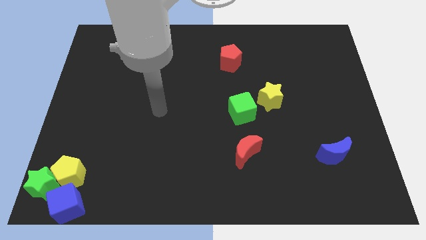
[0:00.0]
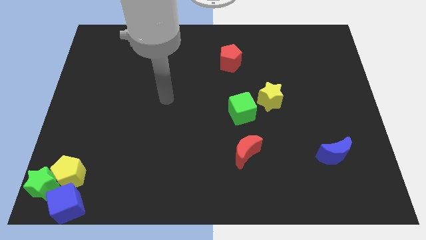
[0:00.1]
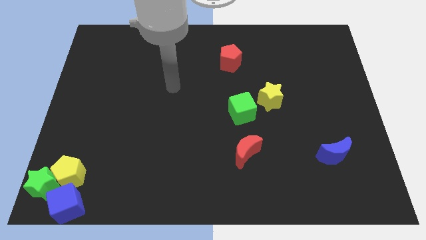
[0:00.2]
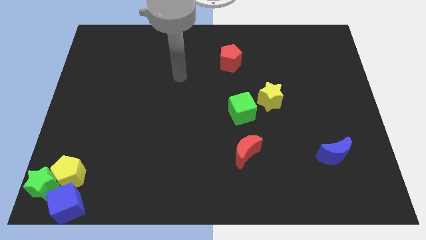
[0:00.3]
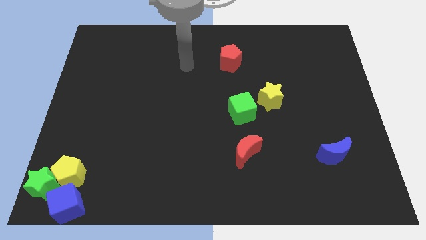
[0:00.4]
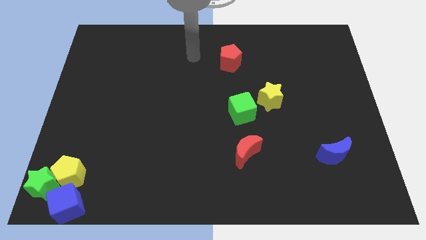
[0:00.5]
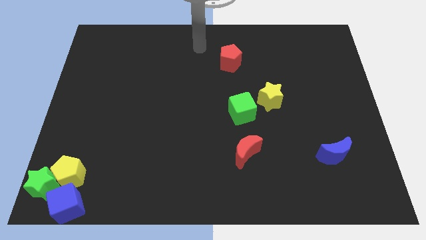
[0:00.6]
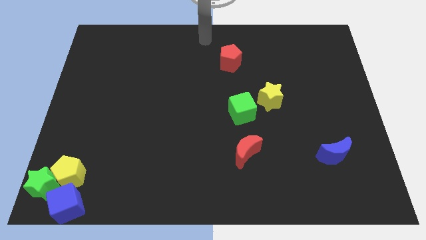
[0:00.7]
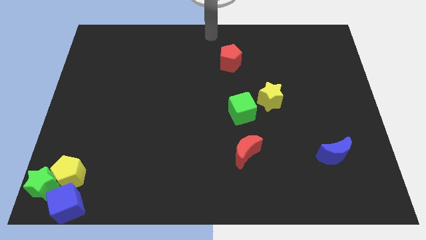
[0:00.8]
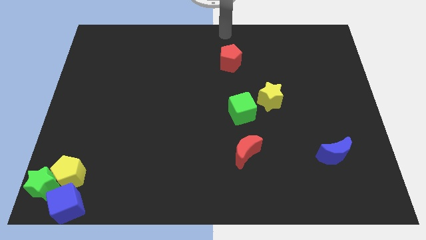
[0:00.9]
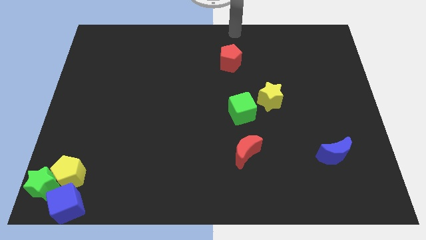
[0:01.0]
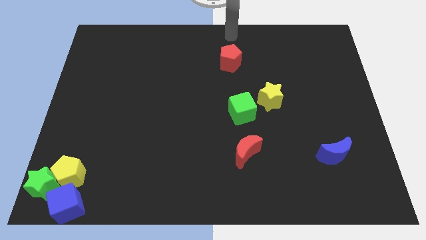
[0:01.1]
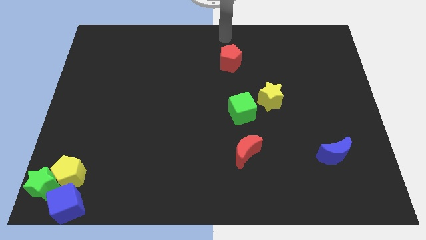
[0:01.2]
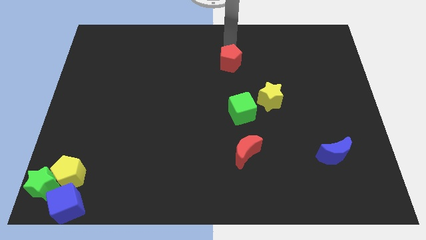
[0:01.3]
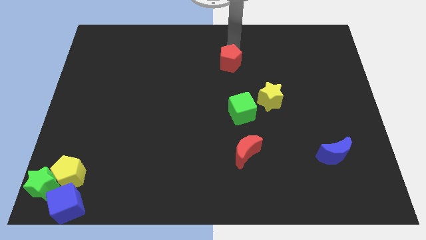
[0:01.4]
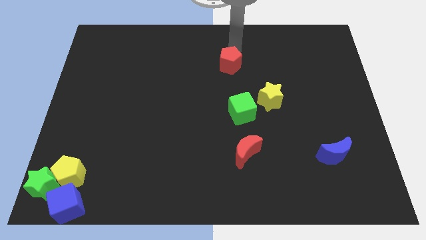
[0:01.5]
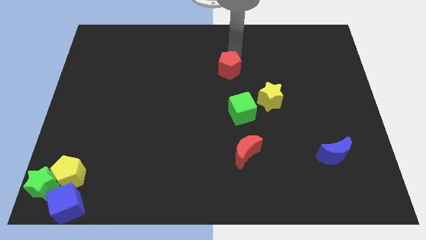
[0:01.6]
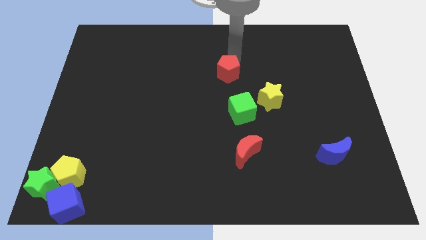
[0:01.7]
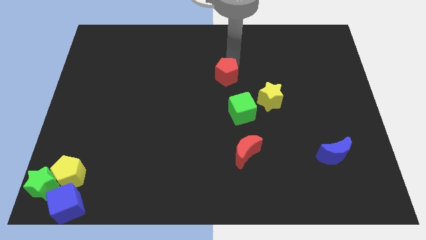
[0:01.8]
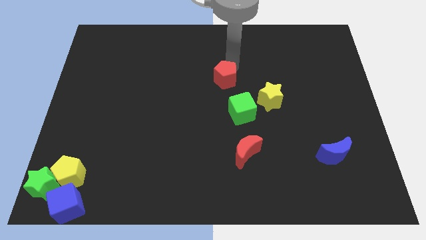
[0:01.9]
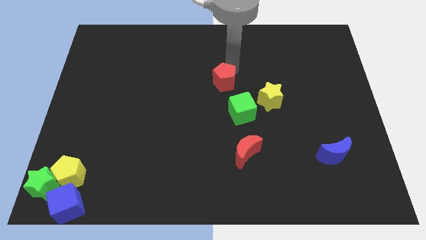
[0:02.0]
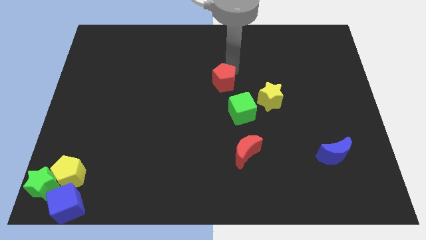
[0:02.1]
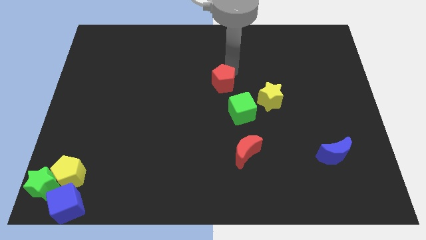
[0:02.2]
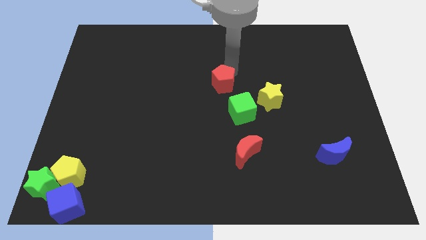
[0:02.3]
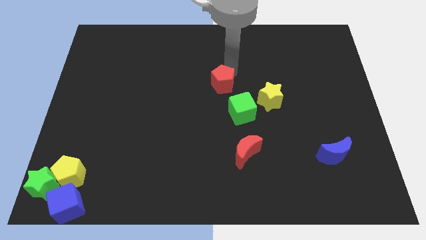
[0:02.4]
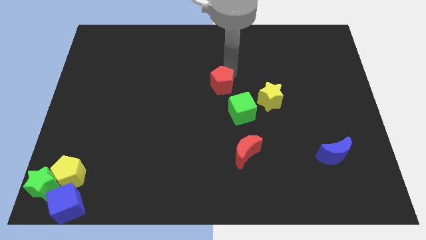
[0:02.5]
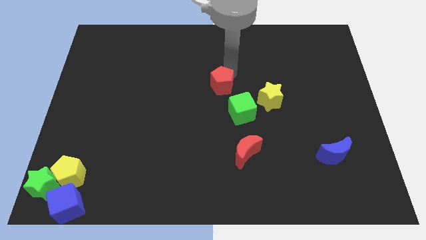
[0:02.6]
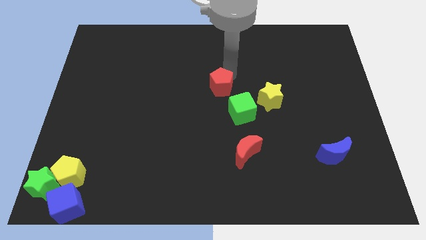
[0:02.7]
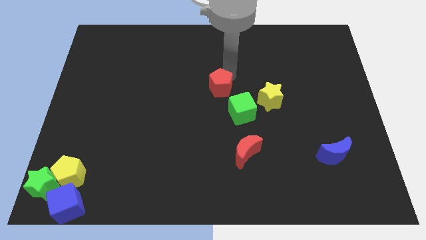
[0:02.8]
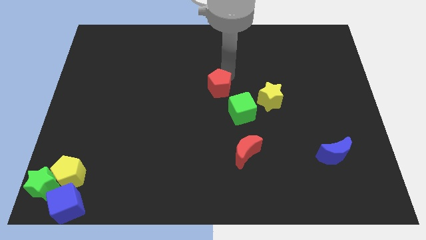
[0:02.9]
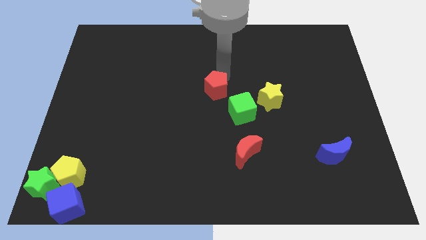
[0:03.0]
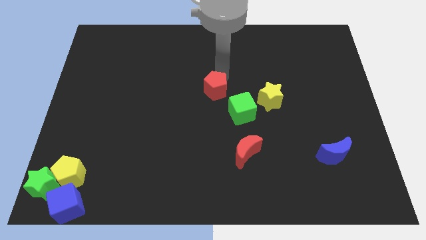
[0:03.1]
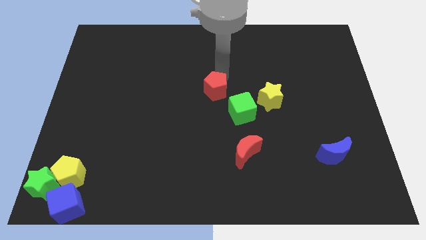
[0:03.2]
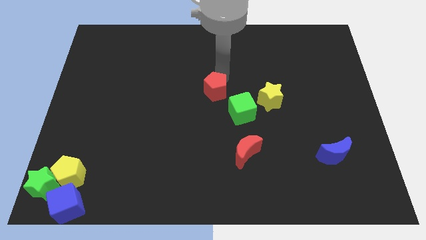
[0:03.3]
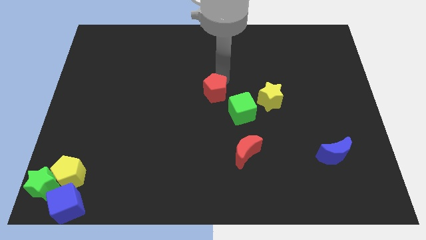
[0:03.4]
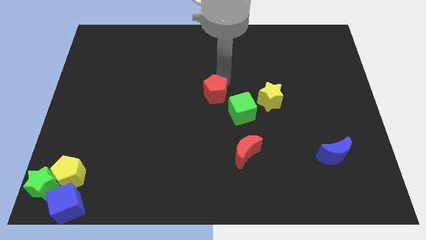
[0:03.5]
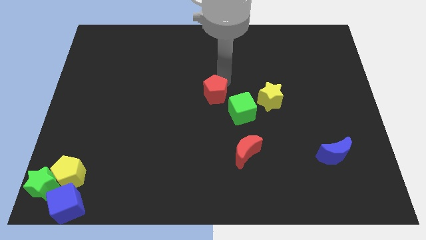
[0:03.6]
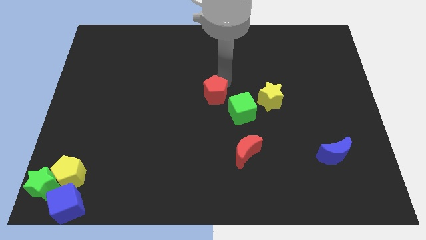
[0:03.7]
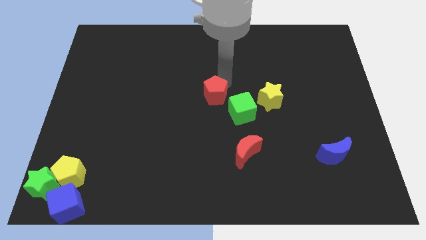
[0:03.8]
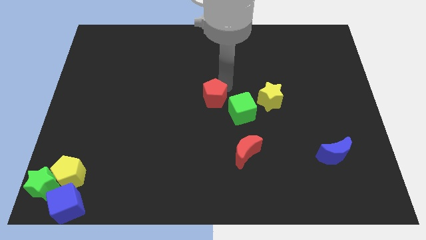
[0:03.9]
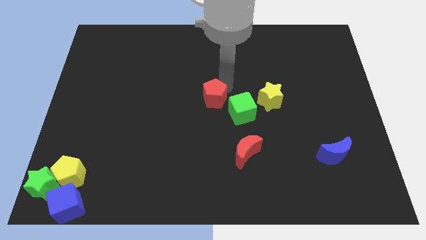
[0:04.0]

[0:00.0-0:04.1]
place red pentagon at the center

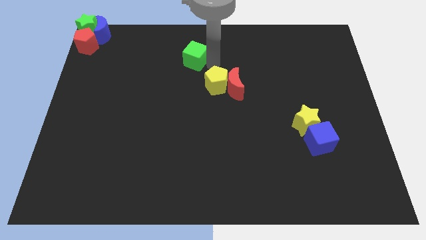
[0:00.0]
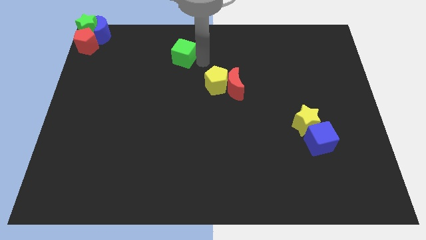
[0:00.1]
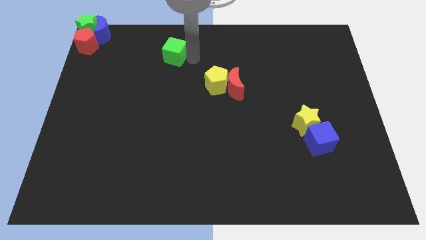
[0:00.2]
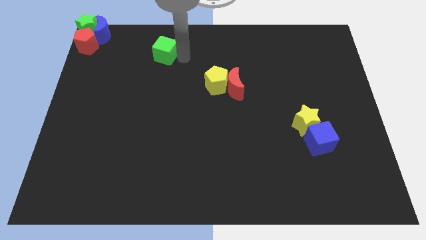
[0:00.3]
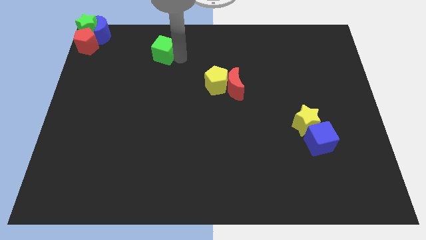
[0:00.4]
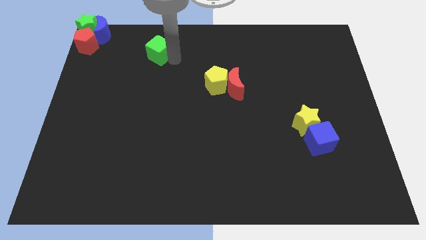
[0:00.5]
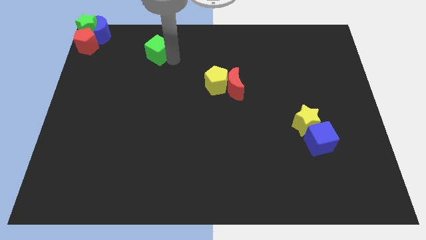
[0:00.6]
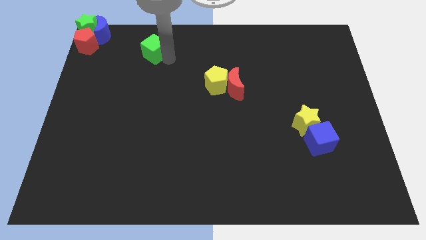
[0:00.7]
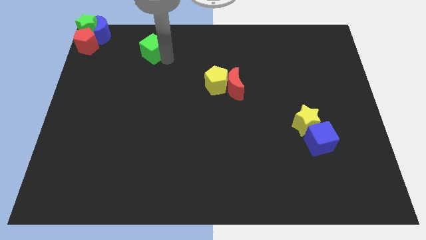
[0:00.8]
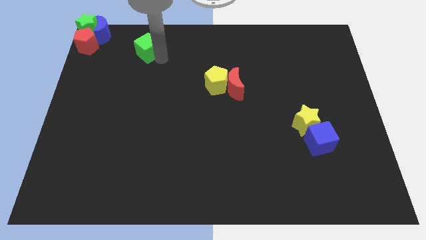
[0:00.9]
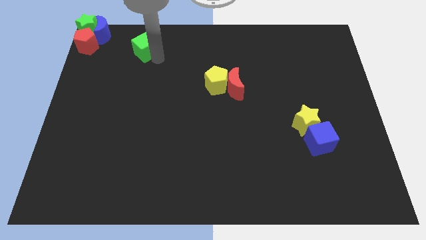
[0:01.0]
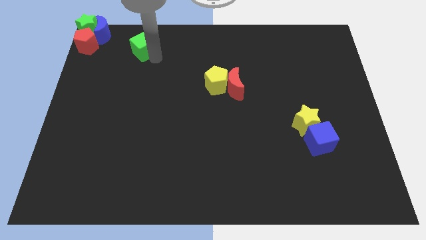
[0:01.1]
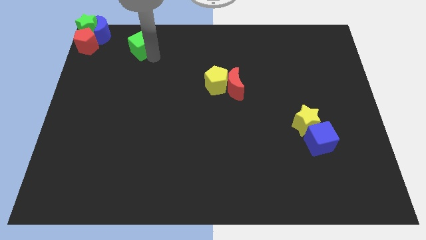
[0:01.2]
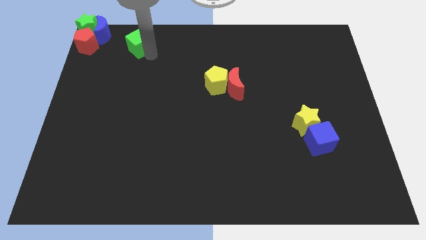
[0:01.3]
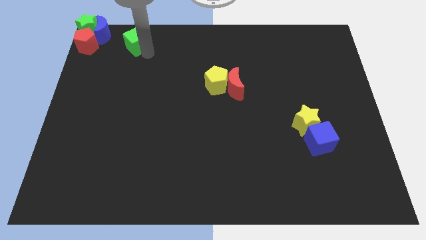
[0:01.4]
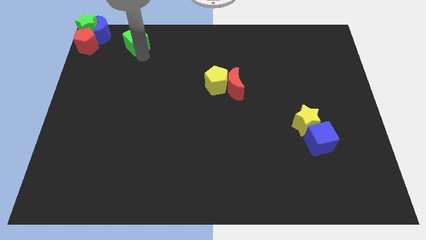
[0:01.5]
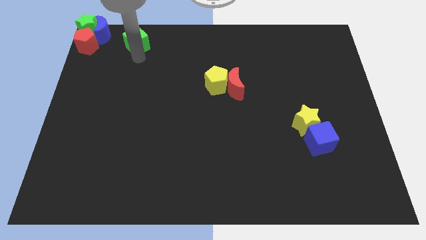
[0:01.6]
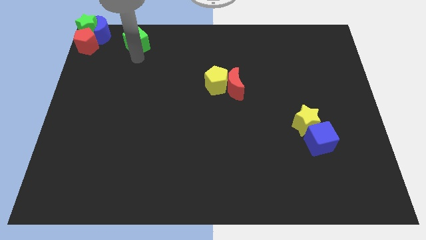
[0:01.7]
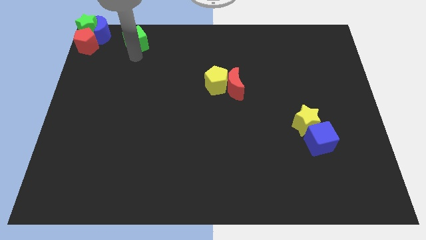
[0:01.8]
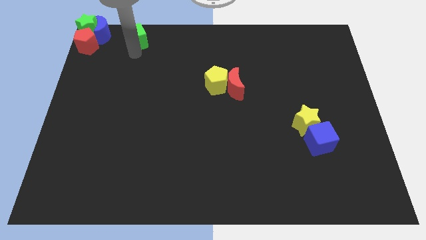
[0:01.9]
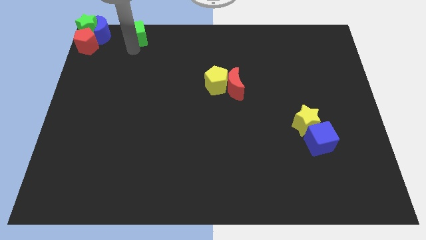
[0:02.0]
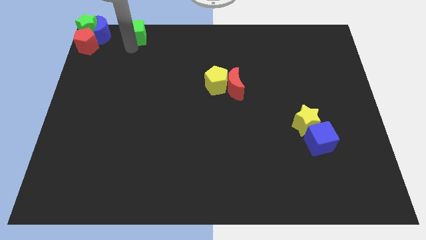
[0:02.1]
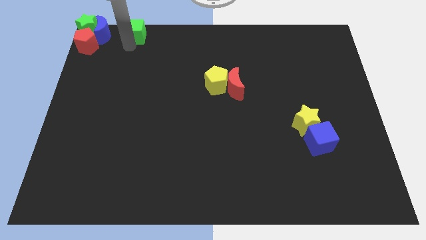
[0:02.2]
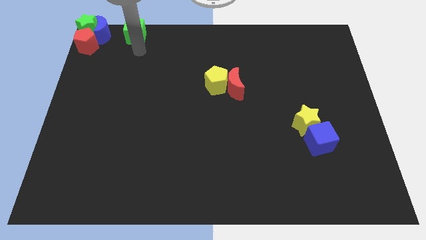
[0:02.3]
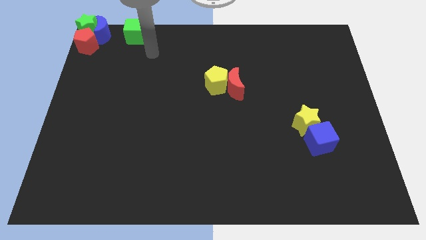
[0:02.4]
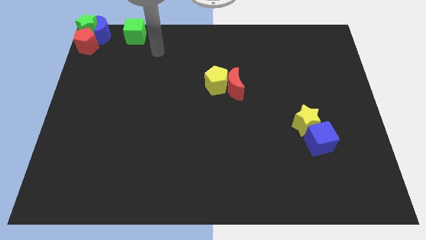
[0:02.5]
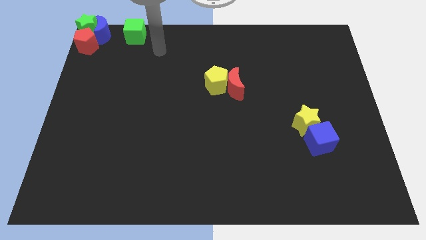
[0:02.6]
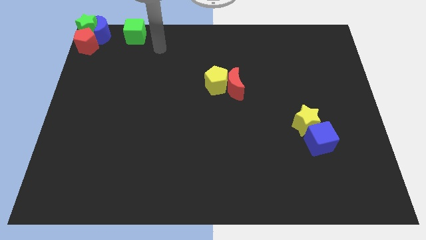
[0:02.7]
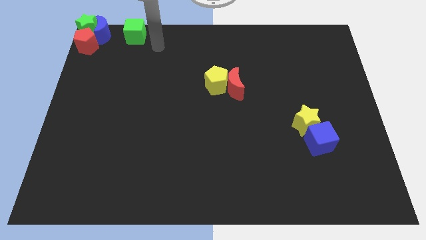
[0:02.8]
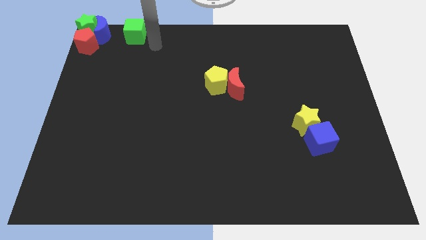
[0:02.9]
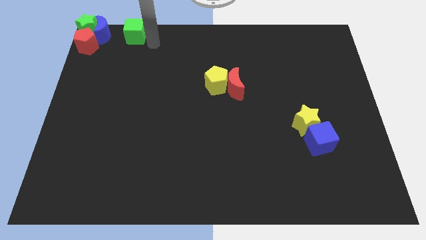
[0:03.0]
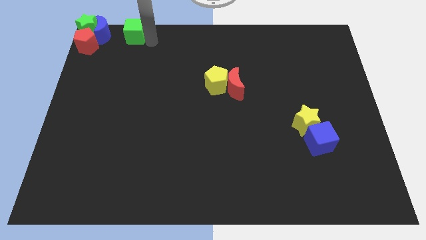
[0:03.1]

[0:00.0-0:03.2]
push the green cube to the right the of blue moon

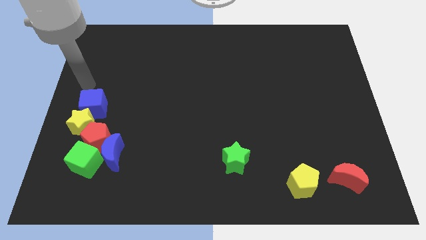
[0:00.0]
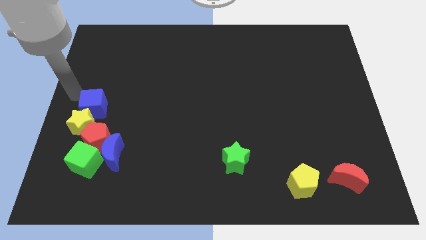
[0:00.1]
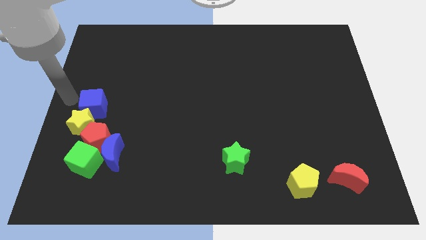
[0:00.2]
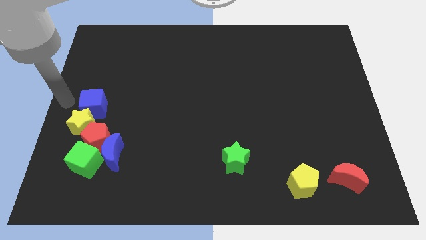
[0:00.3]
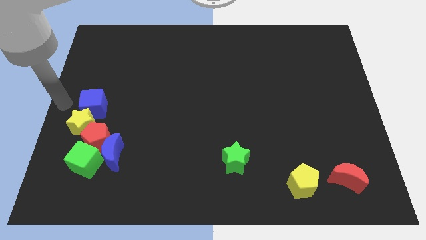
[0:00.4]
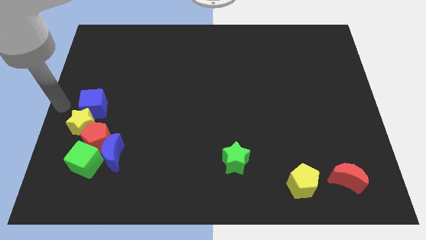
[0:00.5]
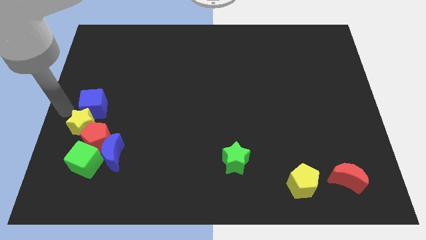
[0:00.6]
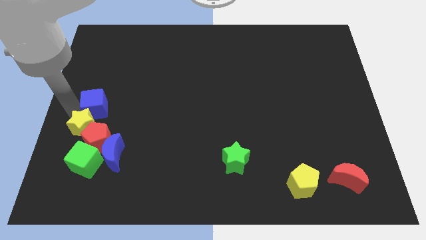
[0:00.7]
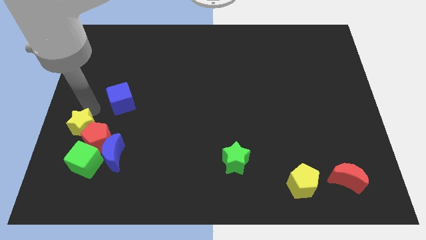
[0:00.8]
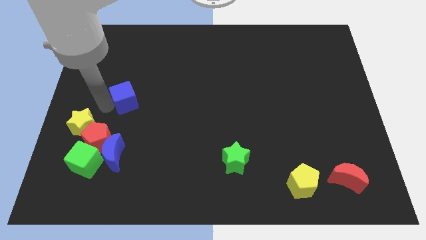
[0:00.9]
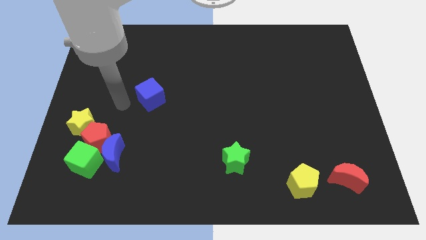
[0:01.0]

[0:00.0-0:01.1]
separate yellow star and blue cube

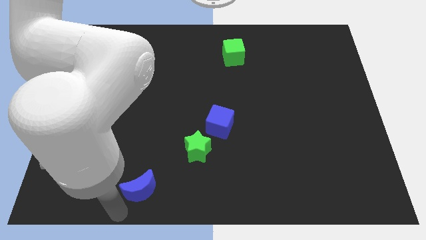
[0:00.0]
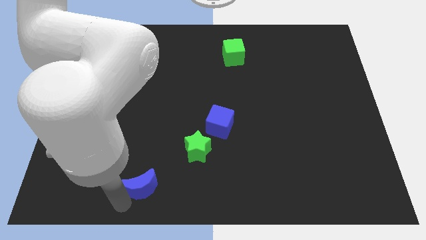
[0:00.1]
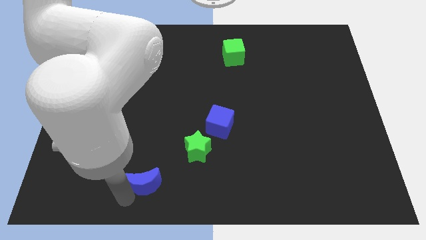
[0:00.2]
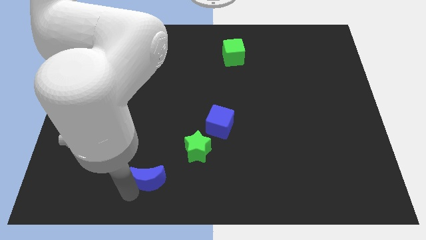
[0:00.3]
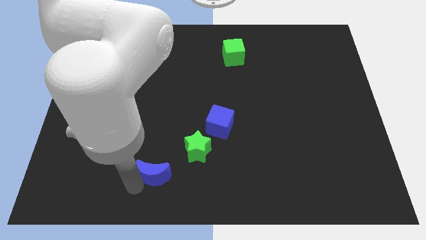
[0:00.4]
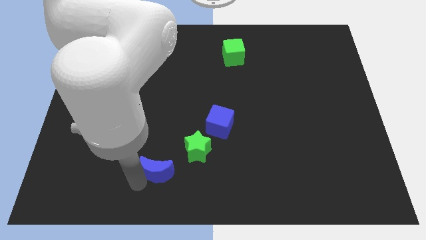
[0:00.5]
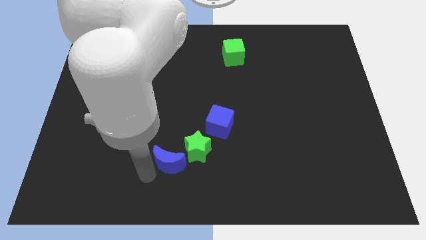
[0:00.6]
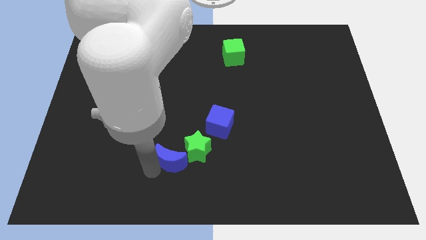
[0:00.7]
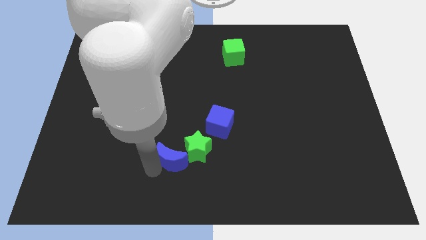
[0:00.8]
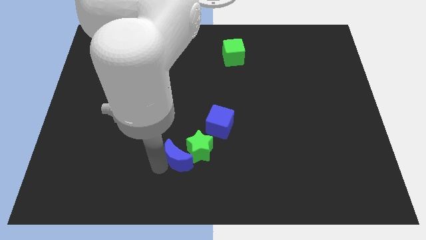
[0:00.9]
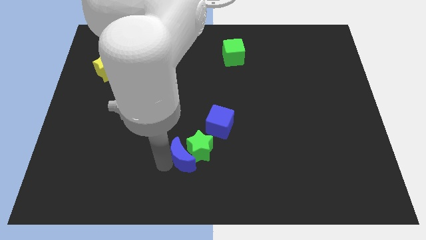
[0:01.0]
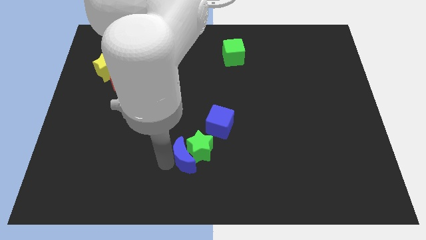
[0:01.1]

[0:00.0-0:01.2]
push the blue moon into the green star
